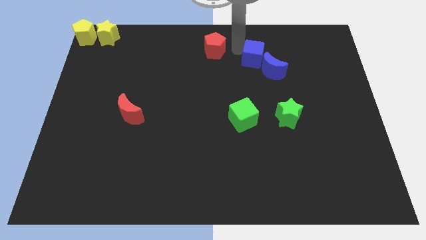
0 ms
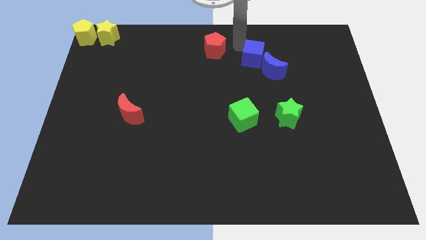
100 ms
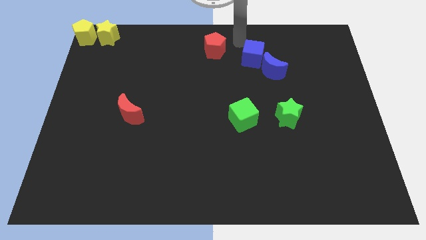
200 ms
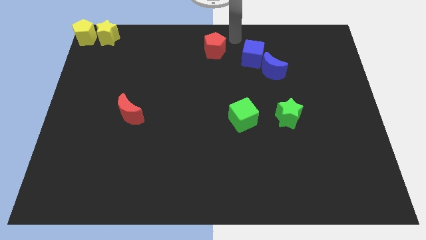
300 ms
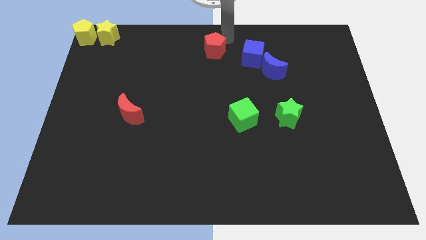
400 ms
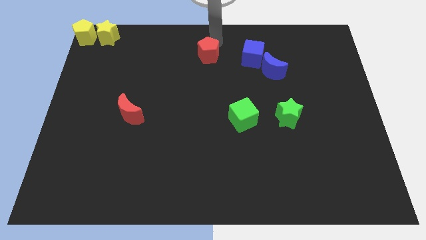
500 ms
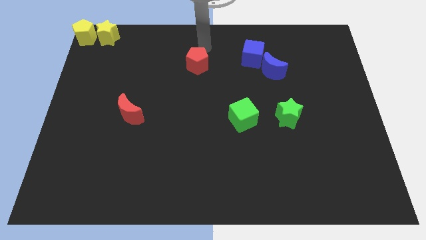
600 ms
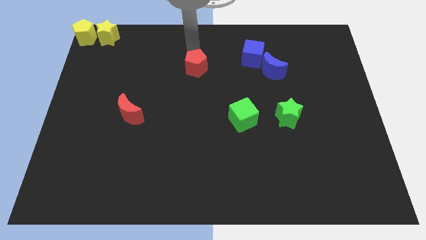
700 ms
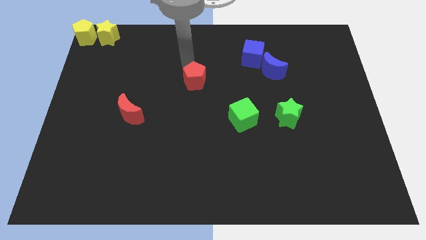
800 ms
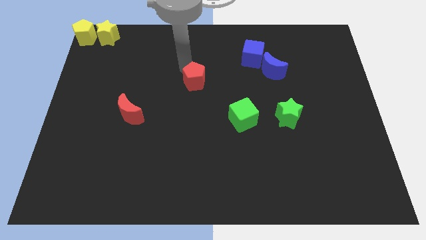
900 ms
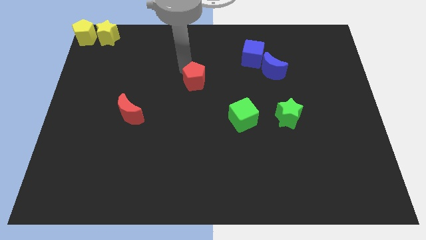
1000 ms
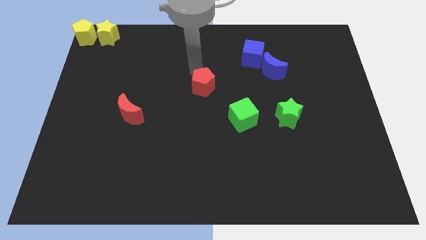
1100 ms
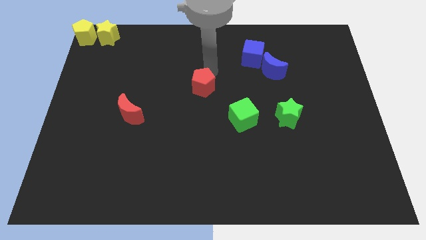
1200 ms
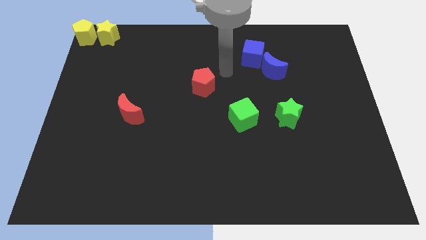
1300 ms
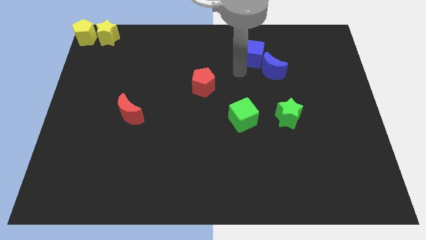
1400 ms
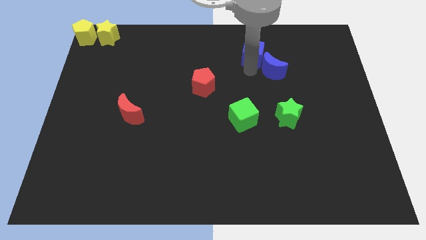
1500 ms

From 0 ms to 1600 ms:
place the red pentagon at the center of the board

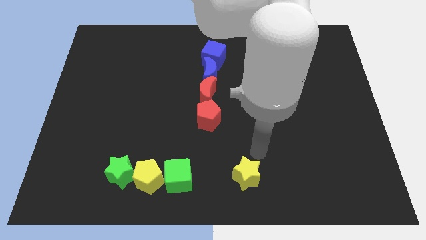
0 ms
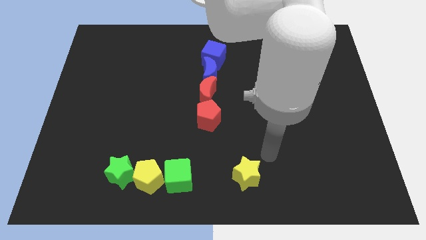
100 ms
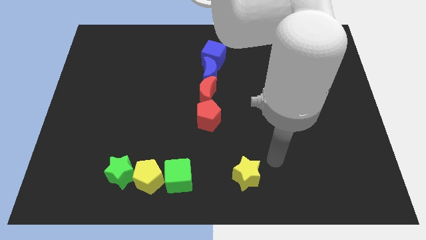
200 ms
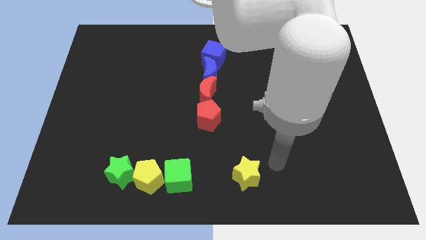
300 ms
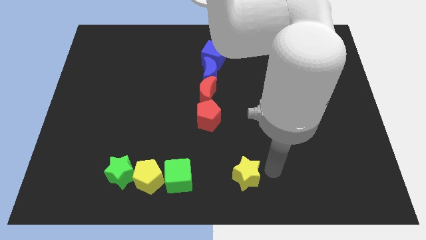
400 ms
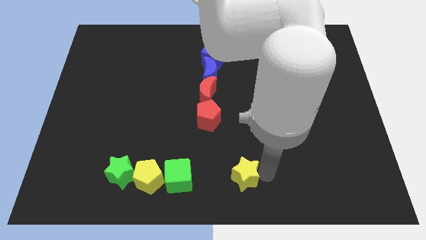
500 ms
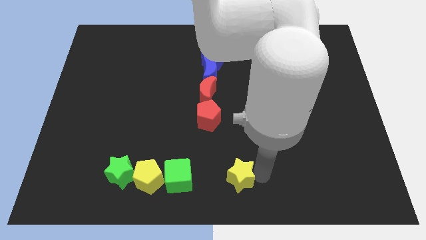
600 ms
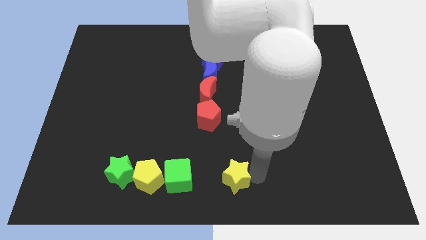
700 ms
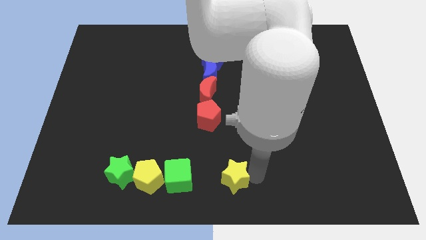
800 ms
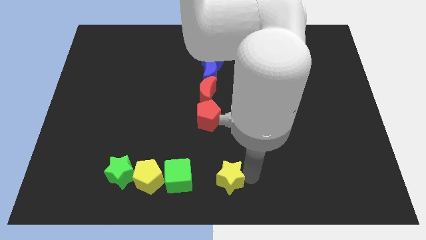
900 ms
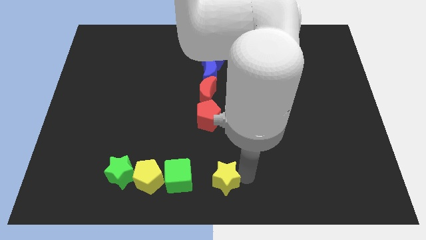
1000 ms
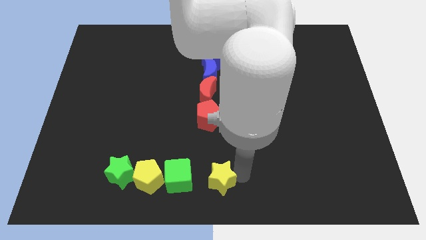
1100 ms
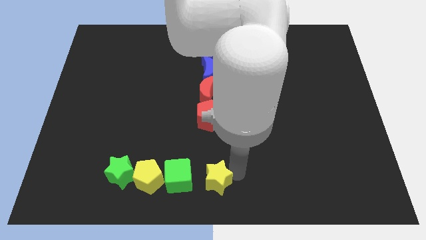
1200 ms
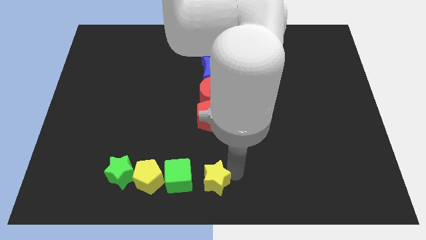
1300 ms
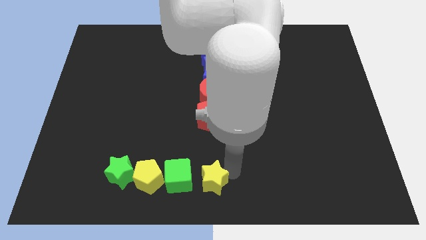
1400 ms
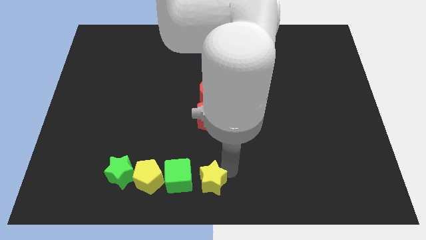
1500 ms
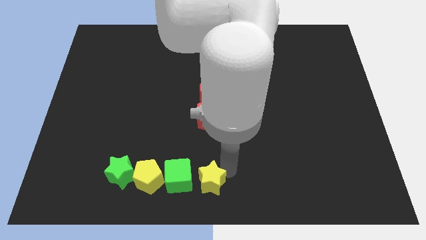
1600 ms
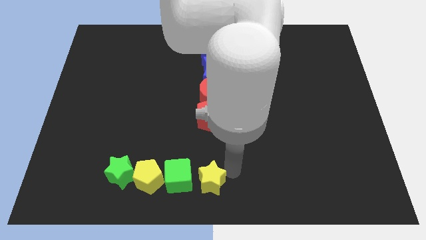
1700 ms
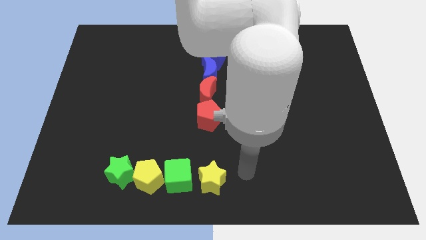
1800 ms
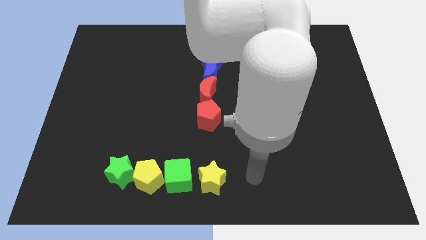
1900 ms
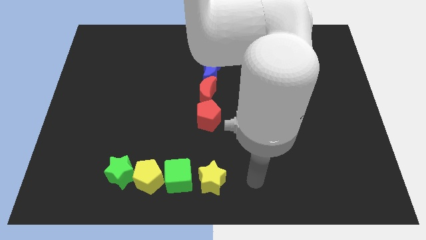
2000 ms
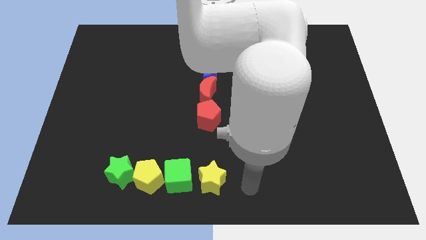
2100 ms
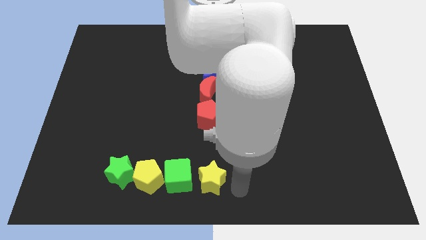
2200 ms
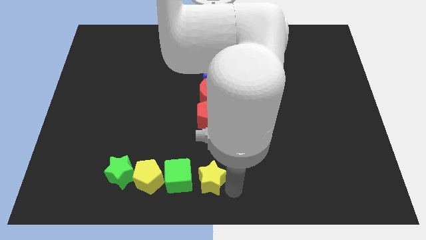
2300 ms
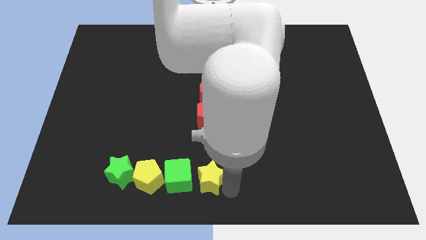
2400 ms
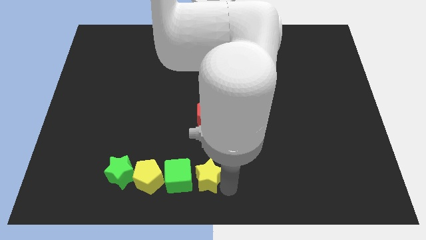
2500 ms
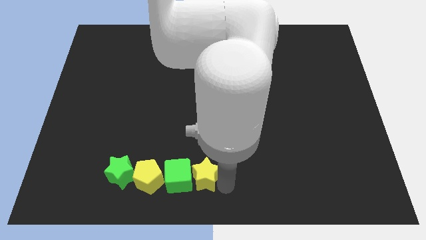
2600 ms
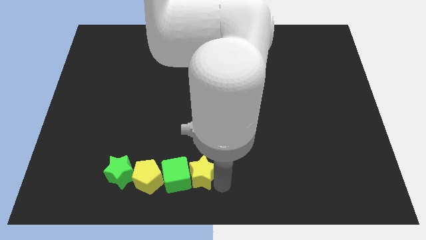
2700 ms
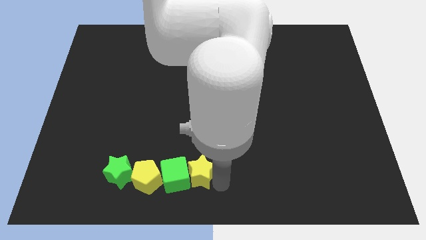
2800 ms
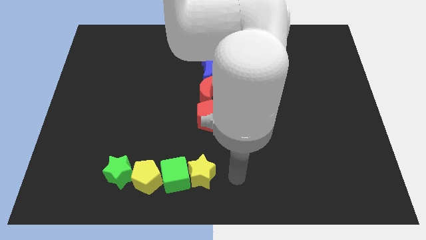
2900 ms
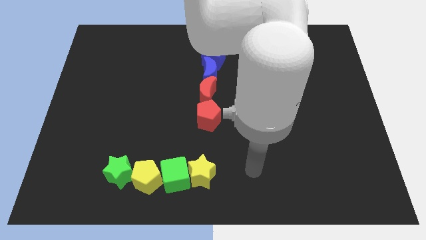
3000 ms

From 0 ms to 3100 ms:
place green star in a horizontal row

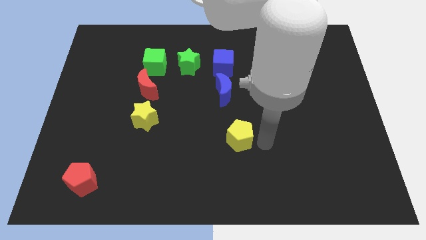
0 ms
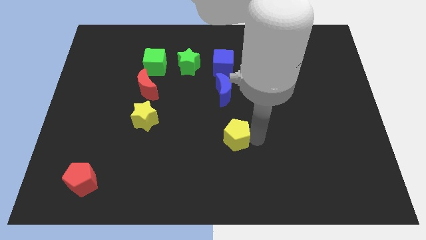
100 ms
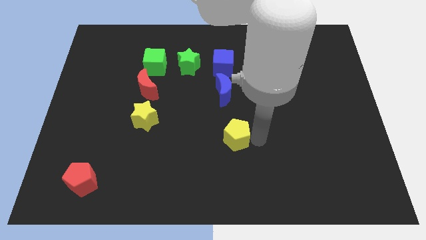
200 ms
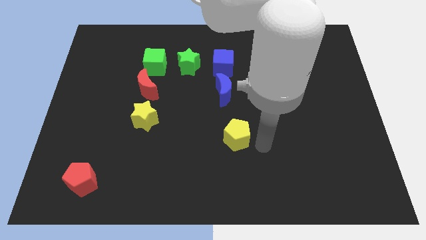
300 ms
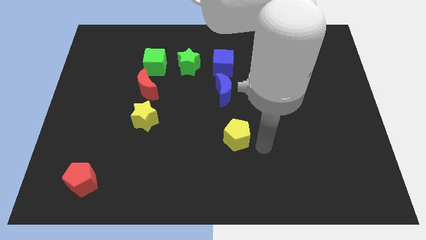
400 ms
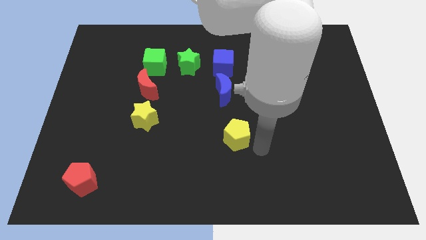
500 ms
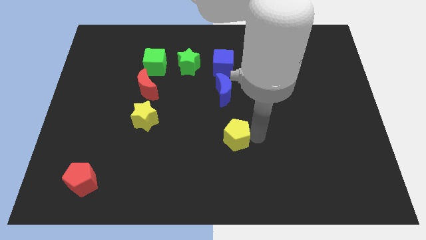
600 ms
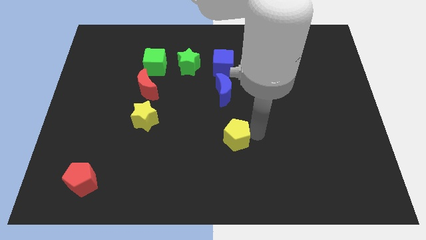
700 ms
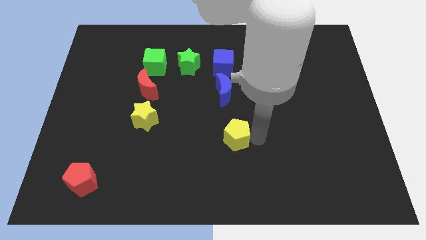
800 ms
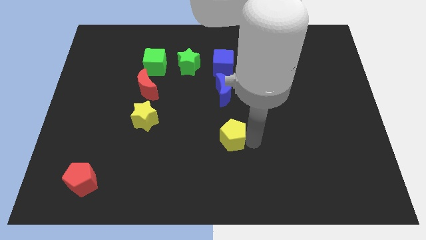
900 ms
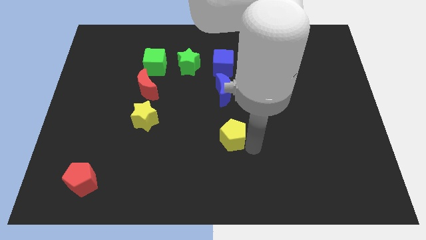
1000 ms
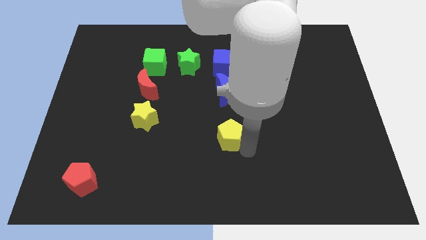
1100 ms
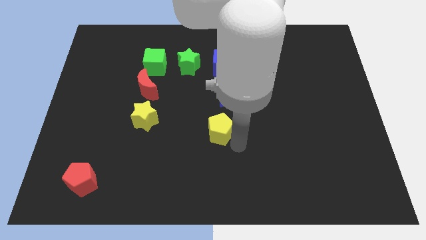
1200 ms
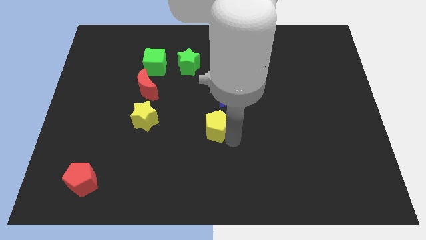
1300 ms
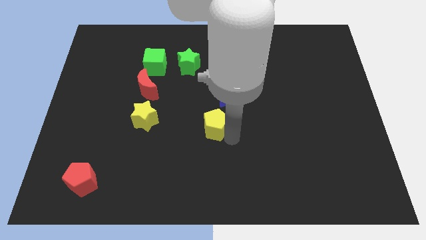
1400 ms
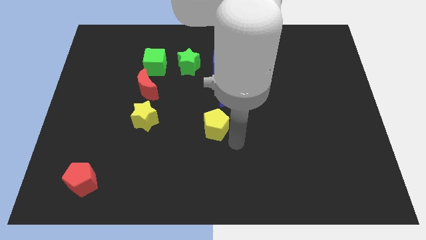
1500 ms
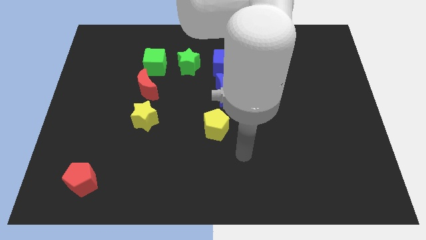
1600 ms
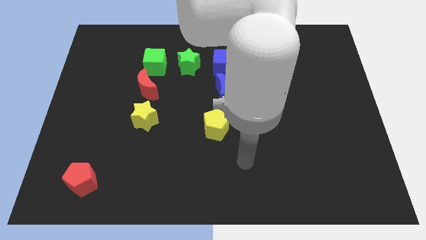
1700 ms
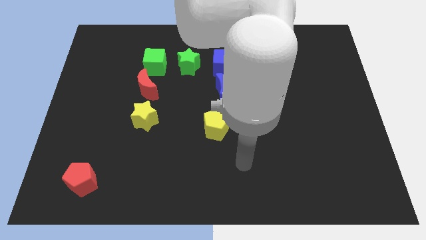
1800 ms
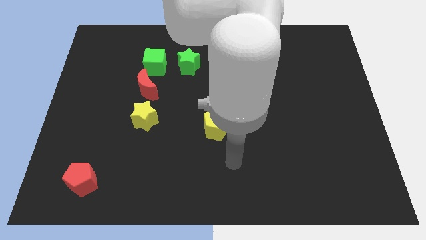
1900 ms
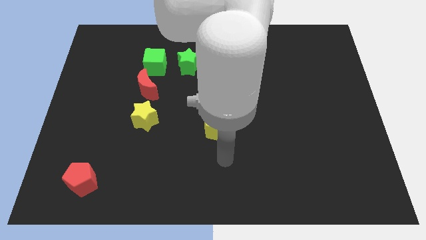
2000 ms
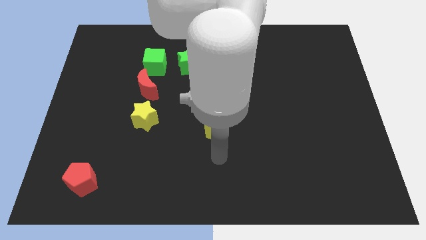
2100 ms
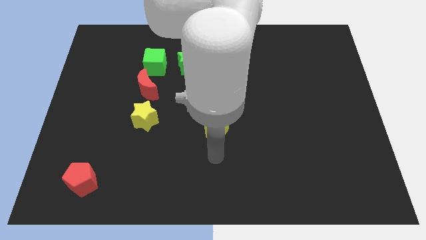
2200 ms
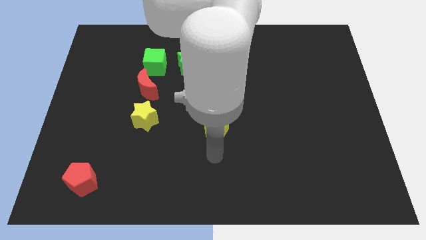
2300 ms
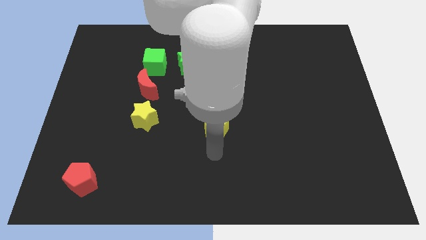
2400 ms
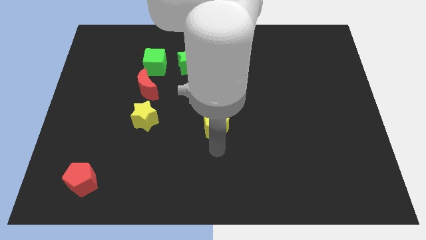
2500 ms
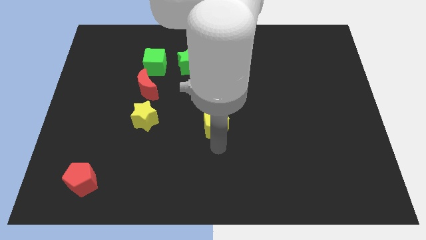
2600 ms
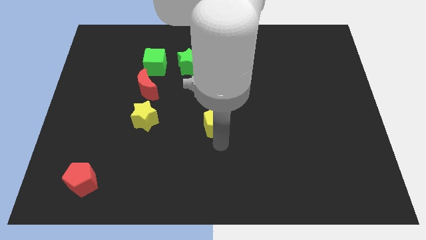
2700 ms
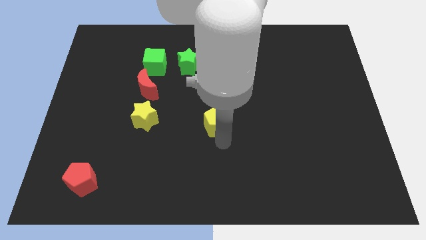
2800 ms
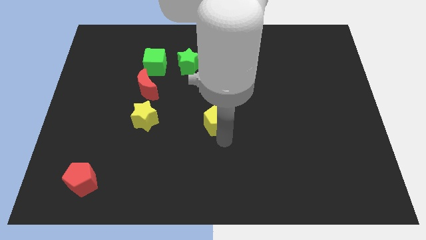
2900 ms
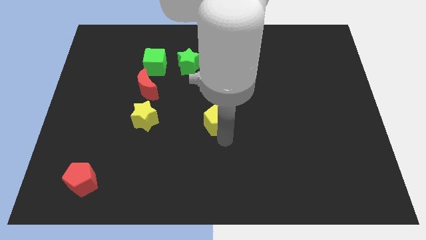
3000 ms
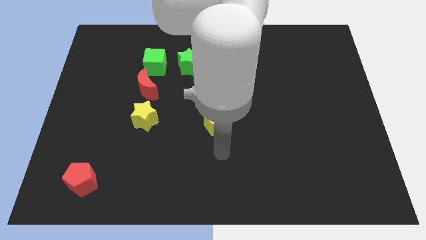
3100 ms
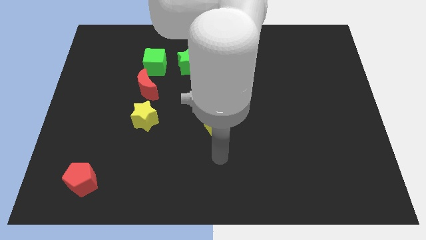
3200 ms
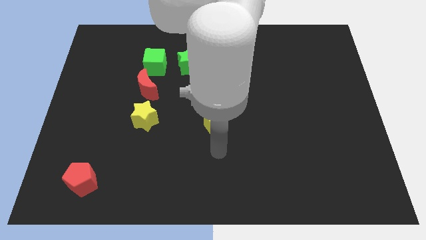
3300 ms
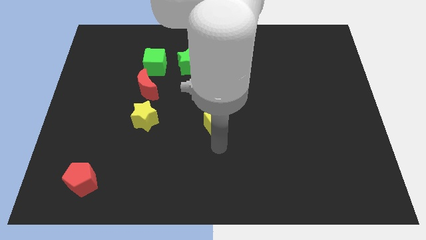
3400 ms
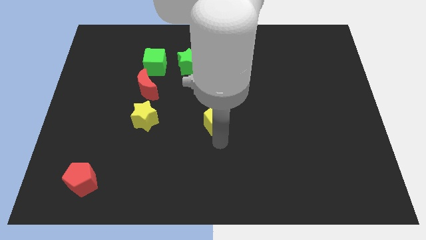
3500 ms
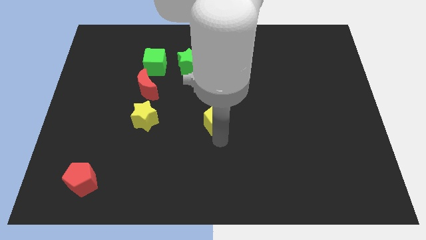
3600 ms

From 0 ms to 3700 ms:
place the yellow pentagon below the blue moon

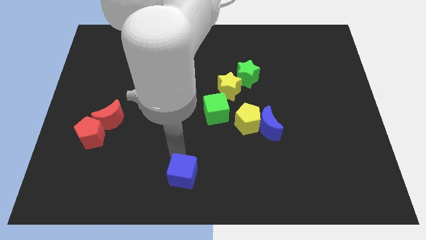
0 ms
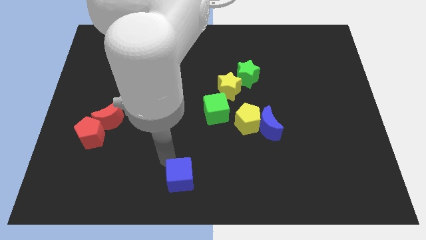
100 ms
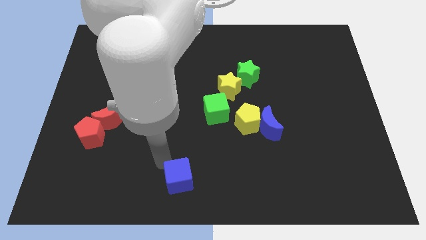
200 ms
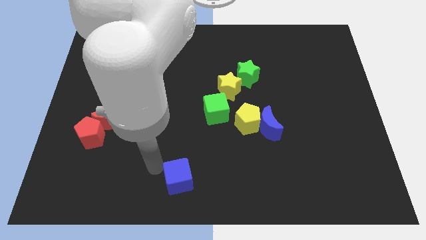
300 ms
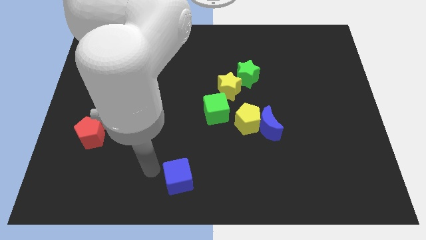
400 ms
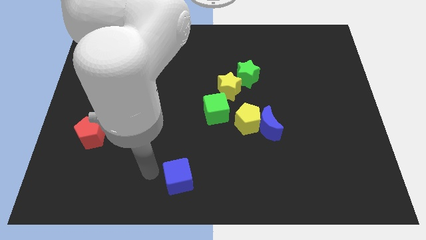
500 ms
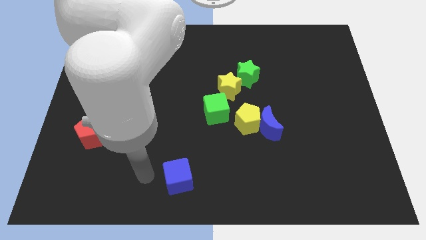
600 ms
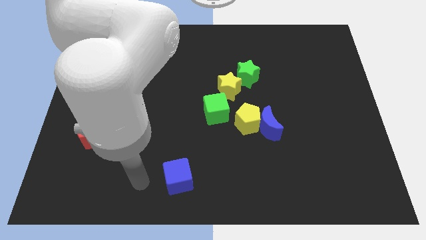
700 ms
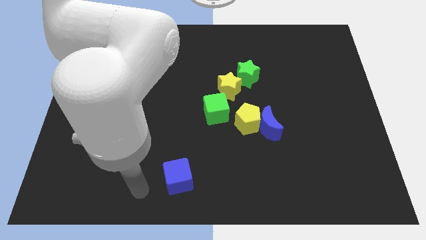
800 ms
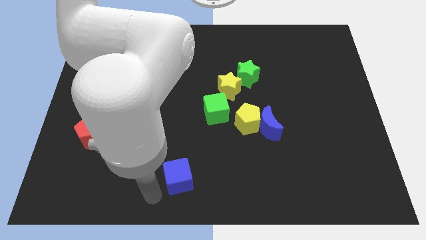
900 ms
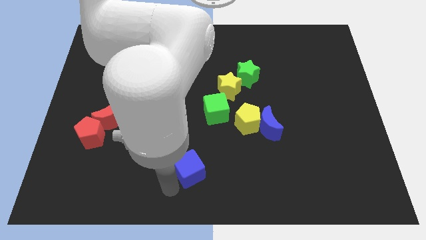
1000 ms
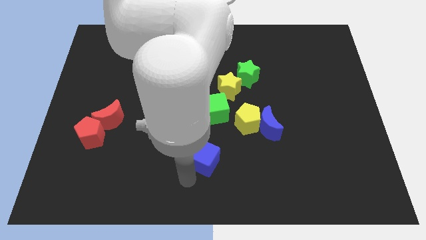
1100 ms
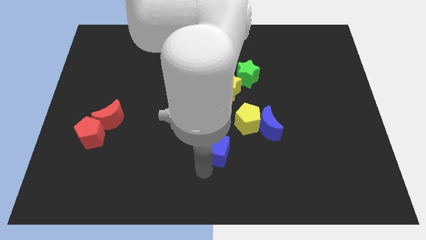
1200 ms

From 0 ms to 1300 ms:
place the blue cube below the green cube
